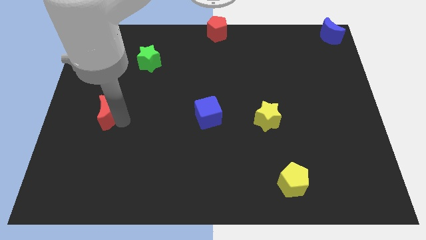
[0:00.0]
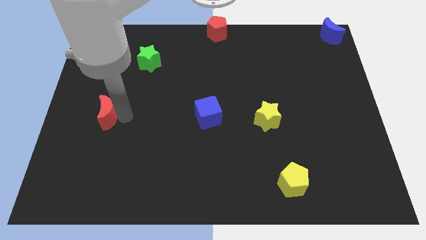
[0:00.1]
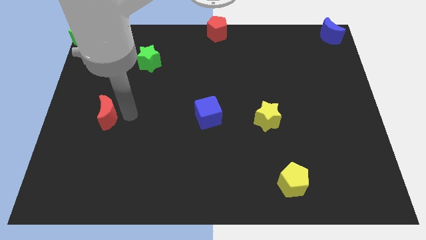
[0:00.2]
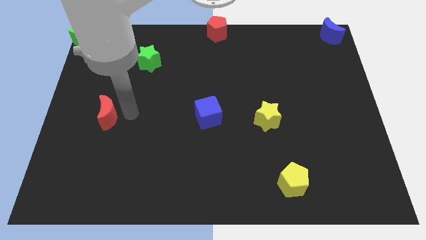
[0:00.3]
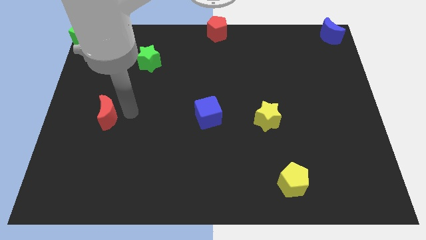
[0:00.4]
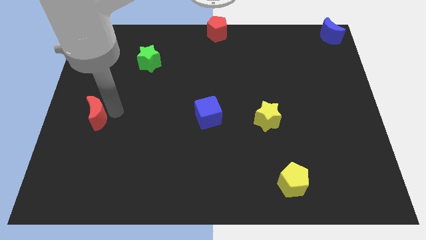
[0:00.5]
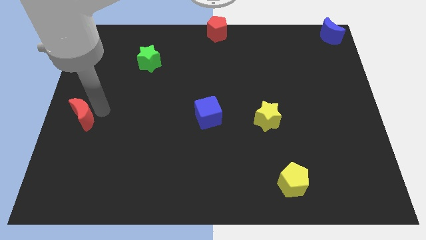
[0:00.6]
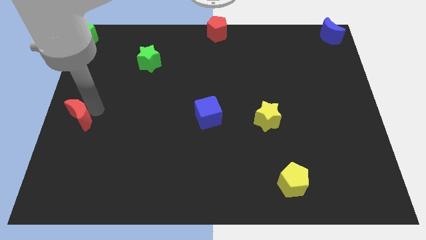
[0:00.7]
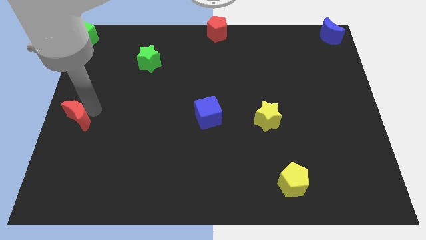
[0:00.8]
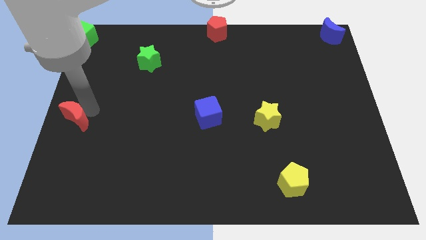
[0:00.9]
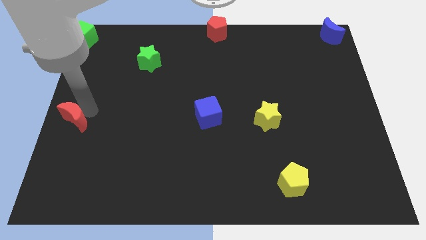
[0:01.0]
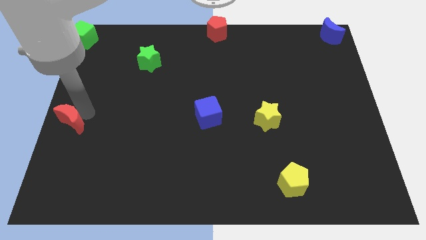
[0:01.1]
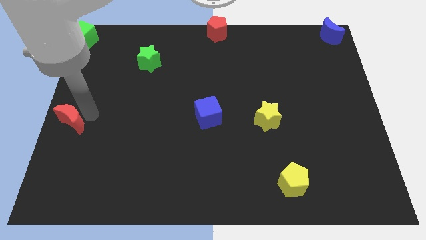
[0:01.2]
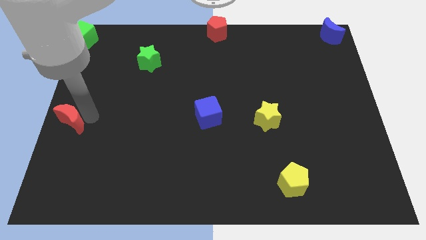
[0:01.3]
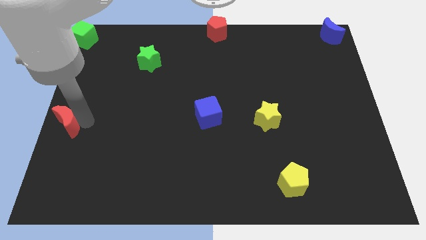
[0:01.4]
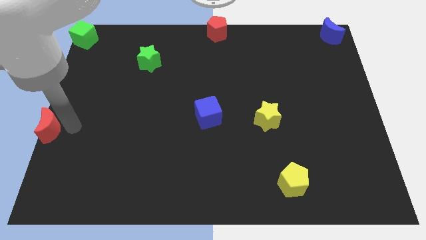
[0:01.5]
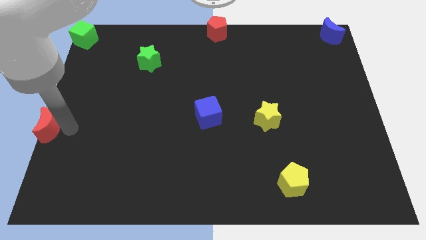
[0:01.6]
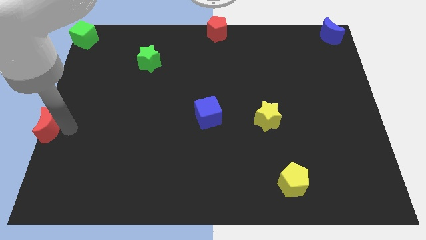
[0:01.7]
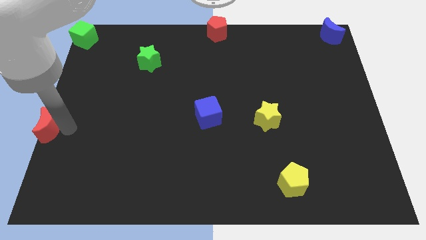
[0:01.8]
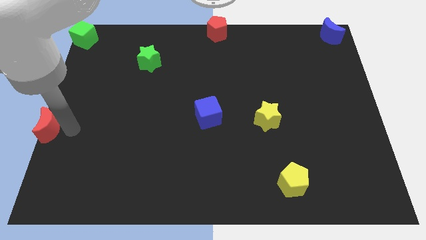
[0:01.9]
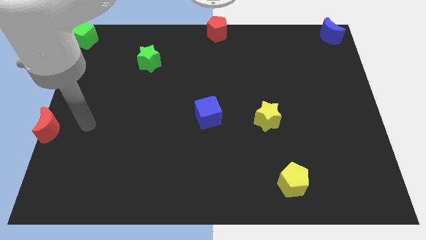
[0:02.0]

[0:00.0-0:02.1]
push red moon to the center left

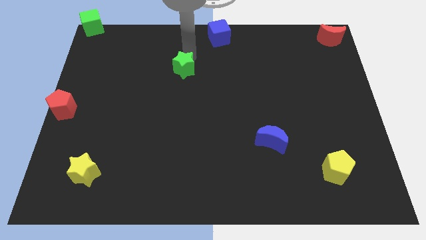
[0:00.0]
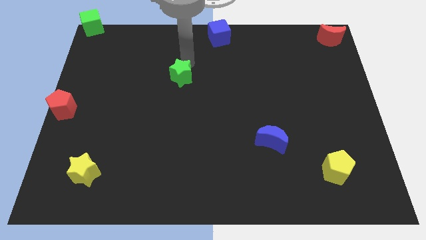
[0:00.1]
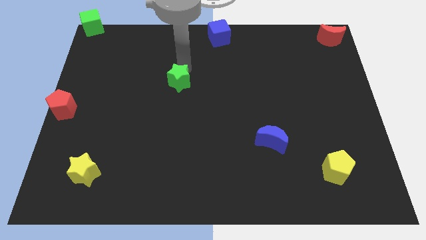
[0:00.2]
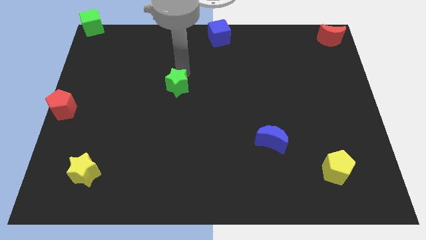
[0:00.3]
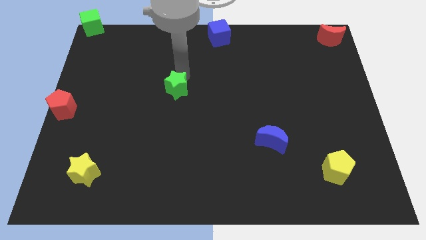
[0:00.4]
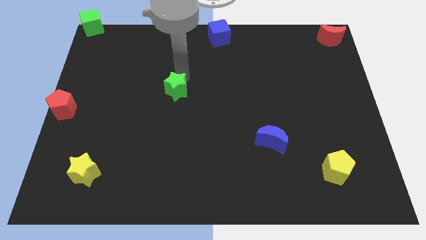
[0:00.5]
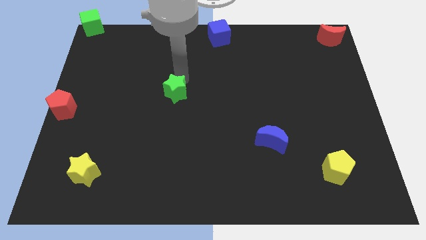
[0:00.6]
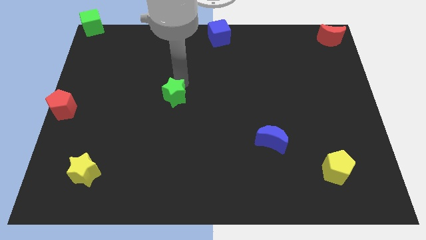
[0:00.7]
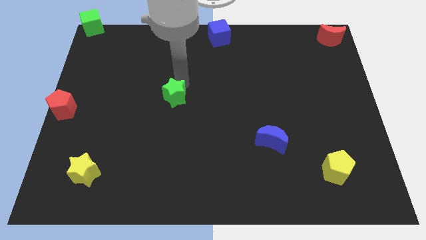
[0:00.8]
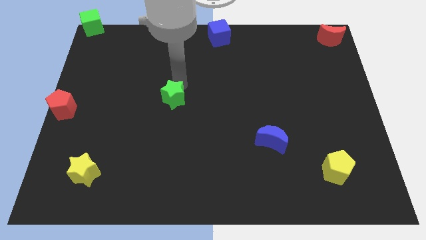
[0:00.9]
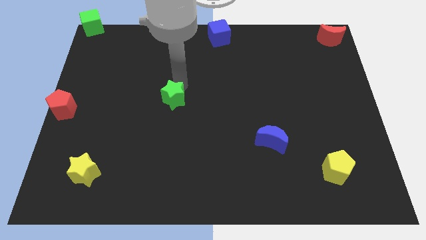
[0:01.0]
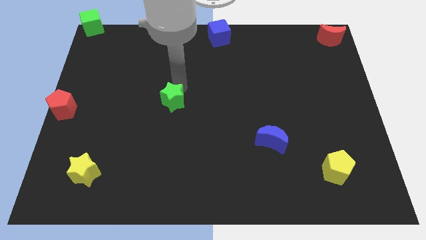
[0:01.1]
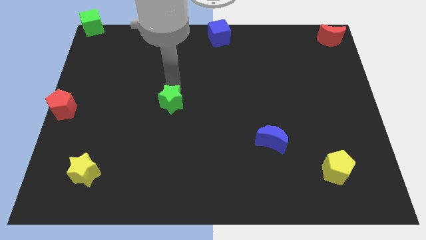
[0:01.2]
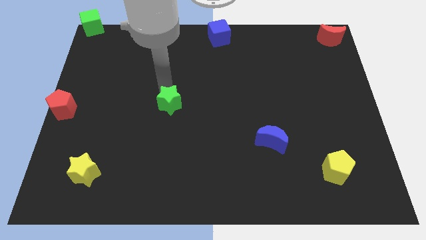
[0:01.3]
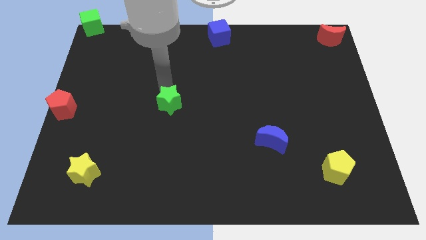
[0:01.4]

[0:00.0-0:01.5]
move the green star horizontally to the right side of the red pentagon

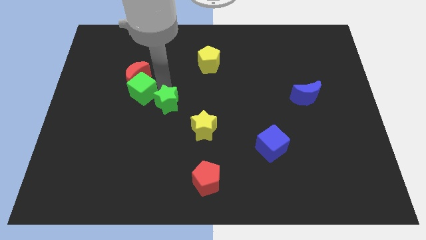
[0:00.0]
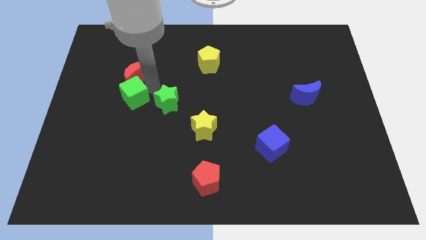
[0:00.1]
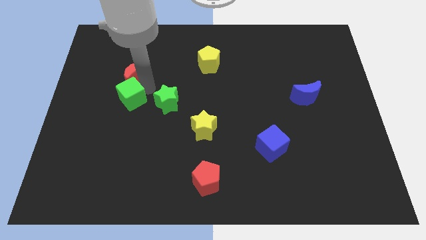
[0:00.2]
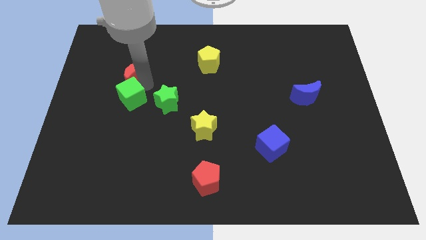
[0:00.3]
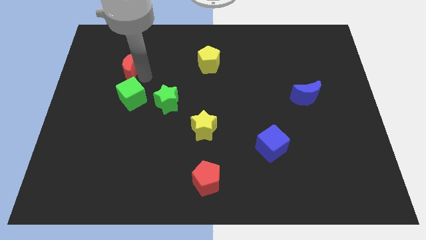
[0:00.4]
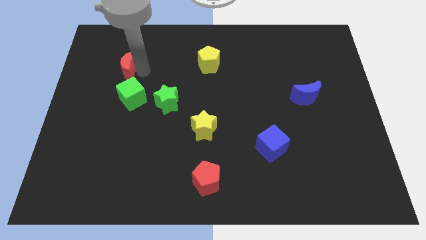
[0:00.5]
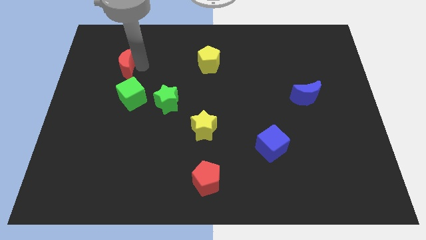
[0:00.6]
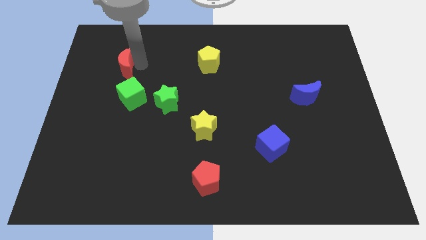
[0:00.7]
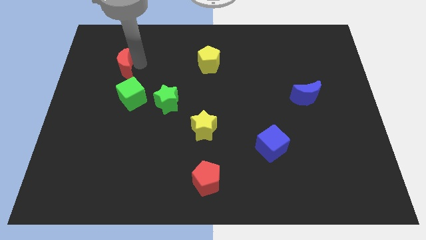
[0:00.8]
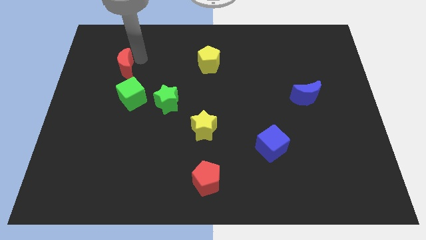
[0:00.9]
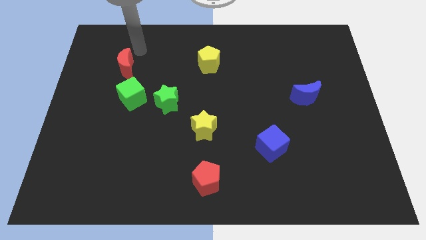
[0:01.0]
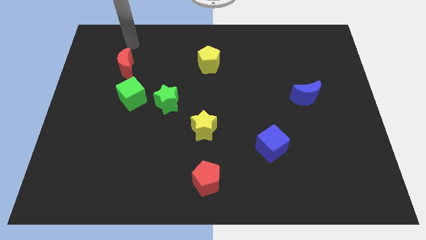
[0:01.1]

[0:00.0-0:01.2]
move the red moon upwards slightly

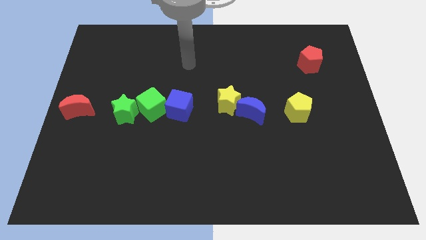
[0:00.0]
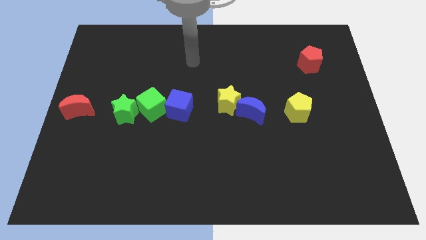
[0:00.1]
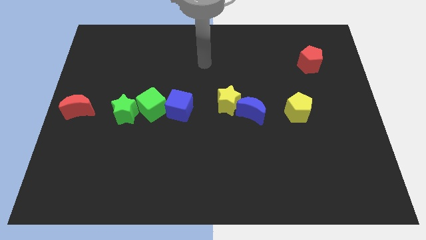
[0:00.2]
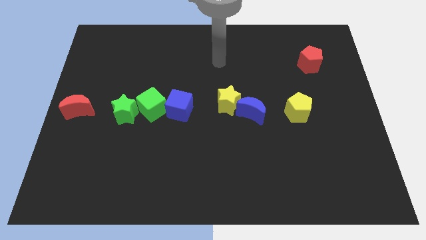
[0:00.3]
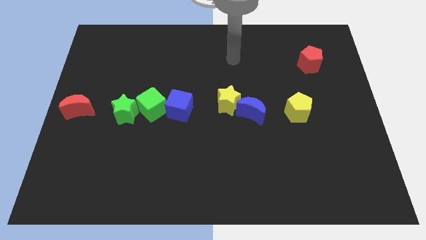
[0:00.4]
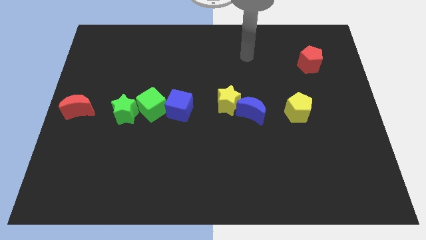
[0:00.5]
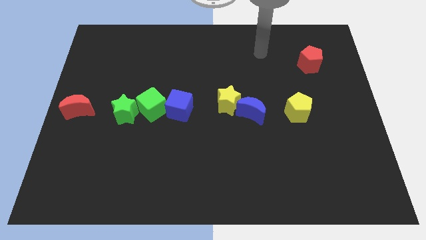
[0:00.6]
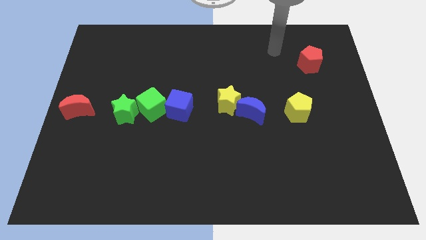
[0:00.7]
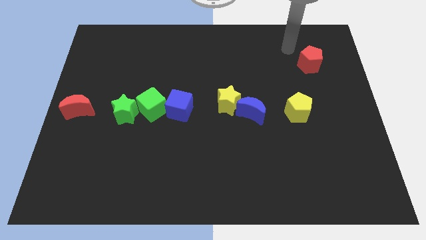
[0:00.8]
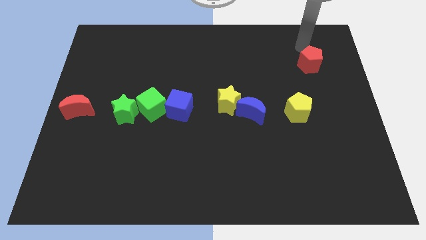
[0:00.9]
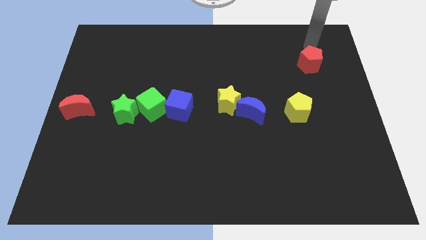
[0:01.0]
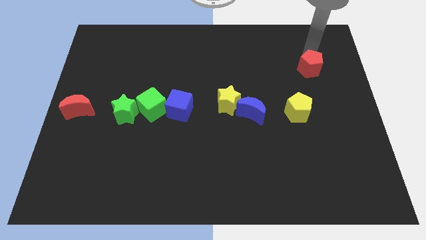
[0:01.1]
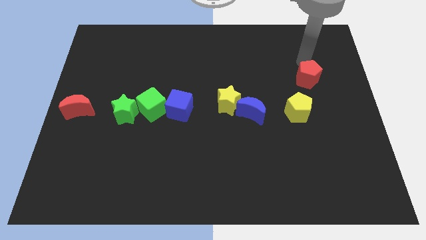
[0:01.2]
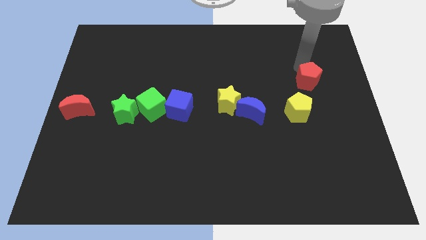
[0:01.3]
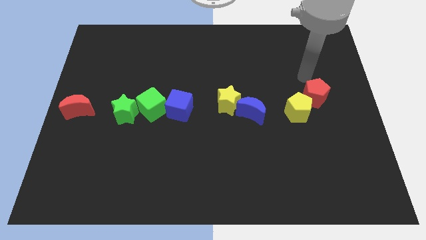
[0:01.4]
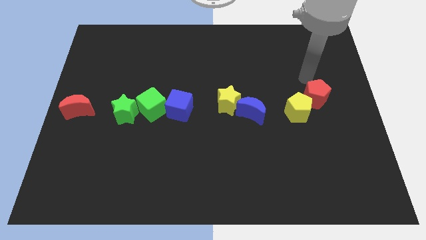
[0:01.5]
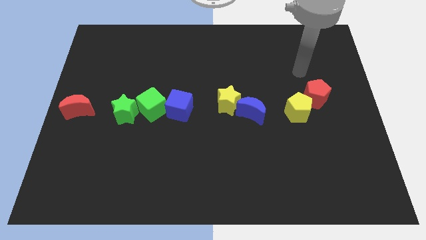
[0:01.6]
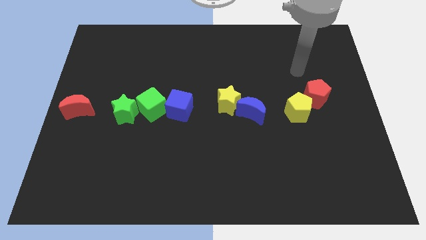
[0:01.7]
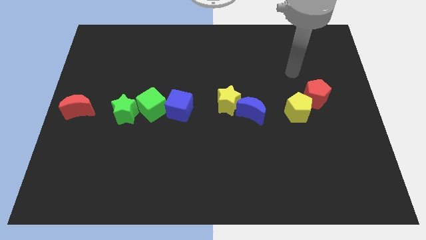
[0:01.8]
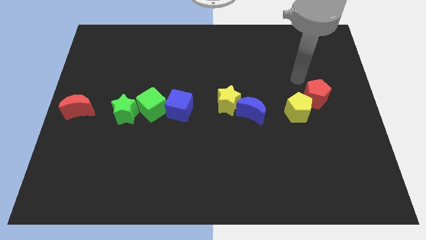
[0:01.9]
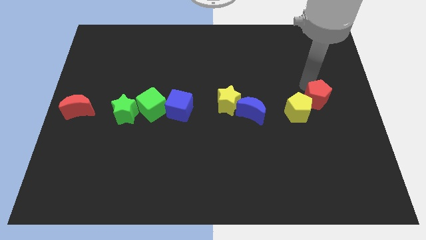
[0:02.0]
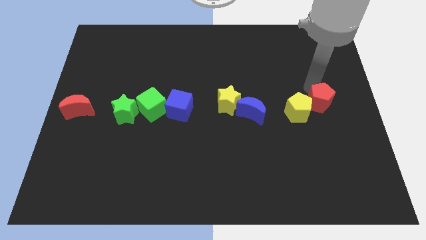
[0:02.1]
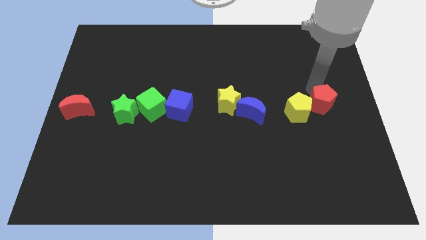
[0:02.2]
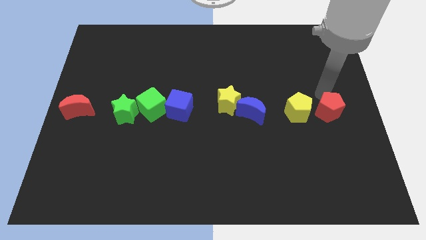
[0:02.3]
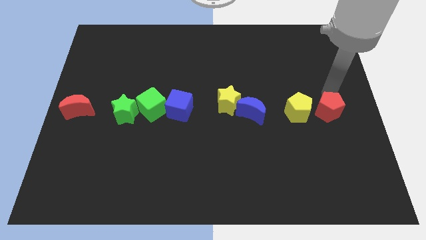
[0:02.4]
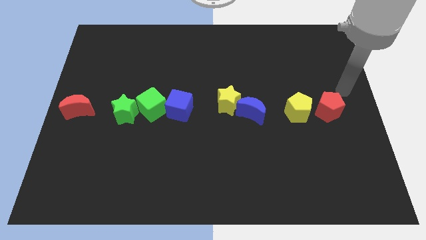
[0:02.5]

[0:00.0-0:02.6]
place the red pentagon right to the yellow pentagon

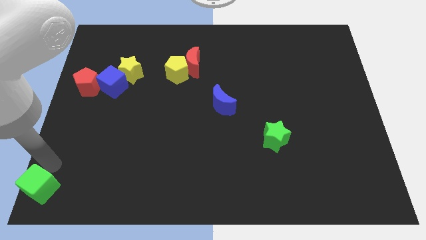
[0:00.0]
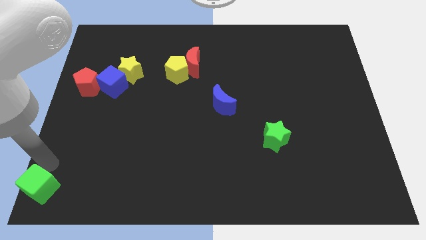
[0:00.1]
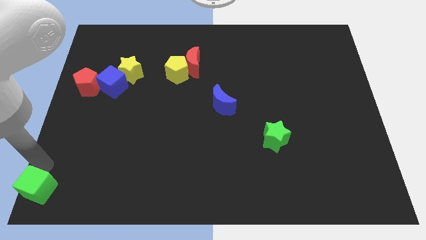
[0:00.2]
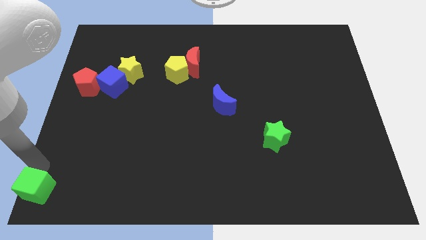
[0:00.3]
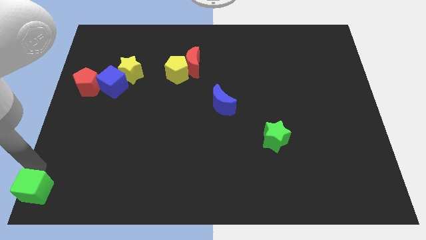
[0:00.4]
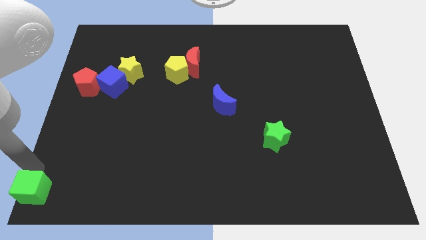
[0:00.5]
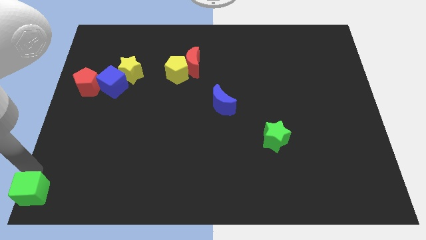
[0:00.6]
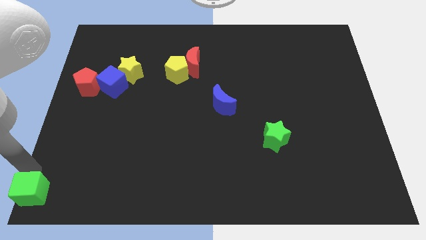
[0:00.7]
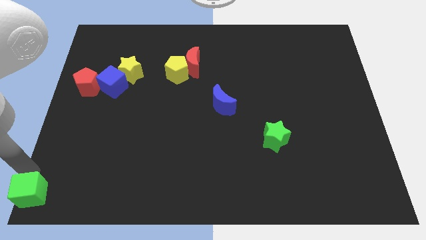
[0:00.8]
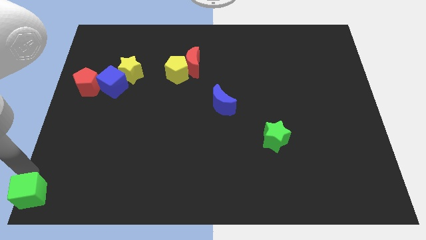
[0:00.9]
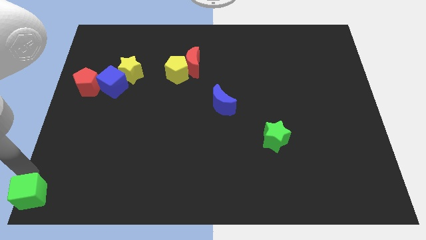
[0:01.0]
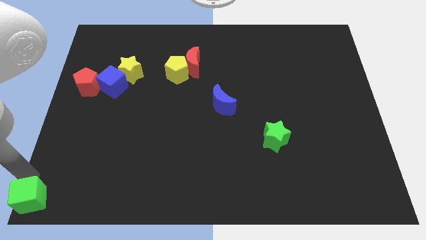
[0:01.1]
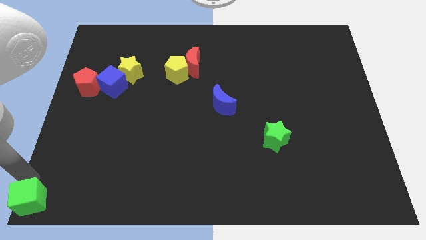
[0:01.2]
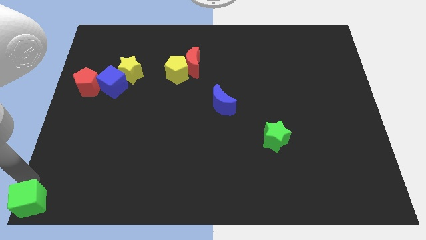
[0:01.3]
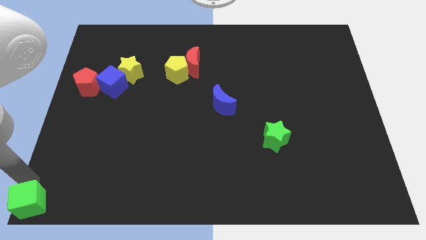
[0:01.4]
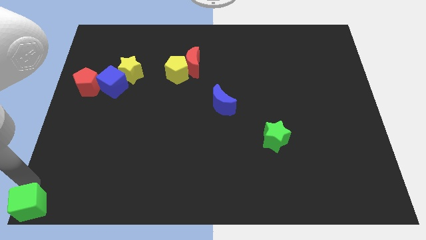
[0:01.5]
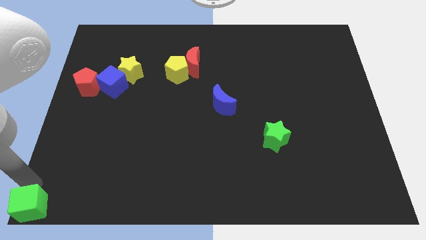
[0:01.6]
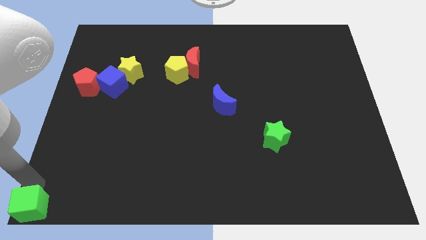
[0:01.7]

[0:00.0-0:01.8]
put the green cube at the bottom left of the board
